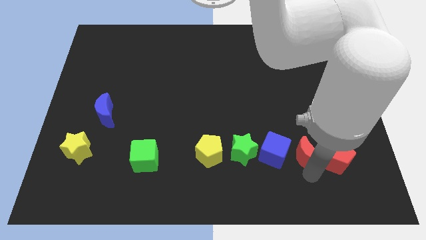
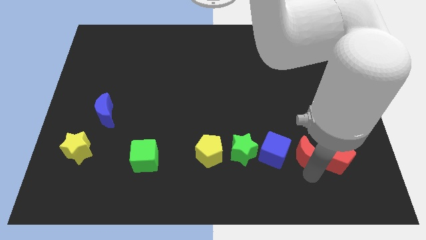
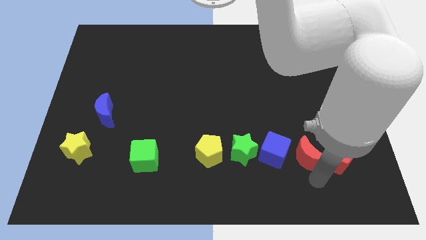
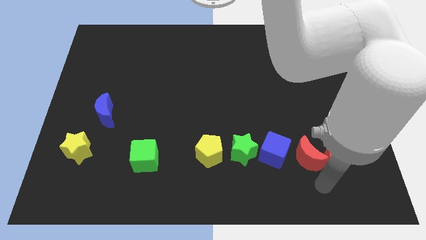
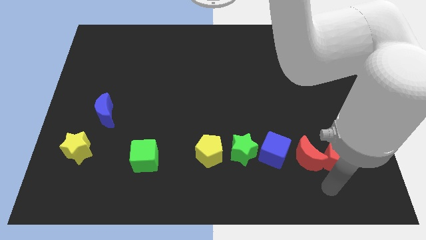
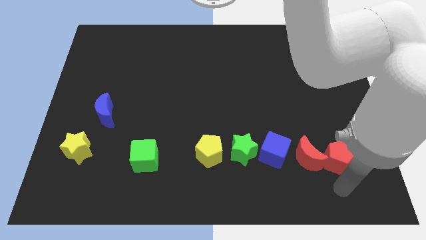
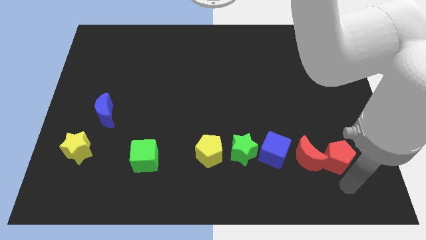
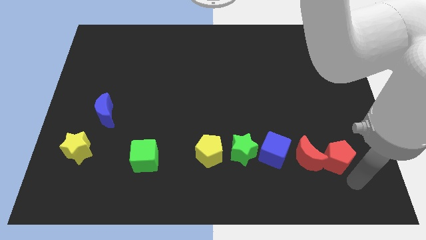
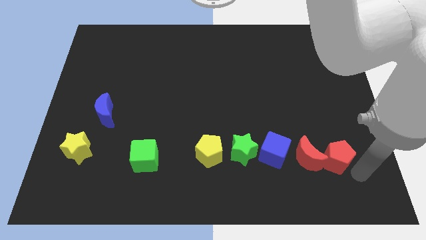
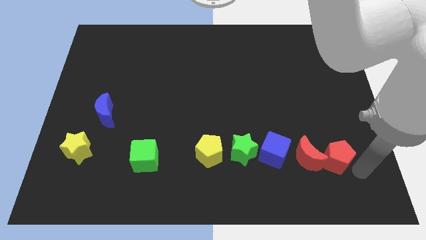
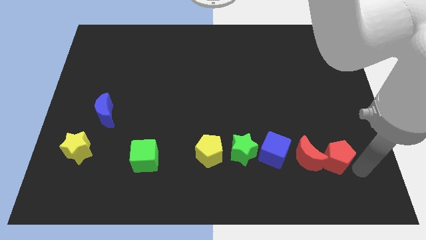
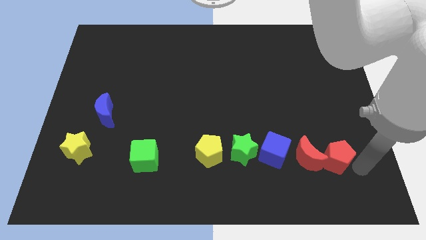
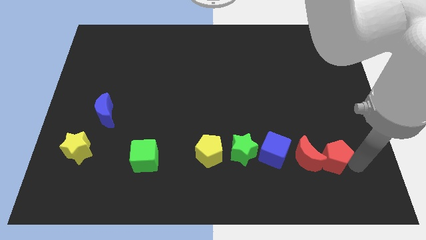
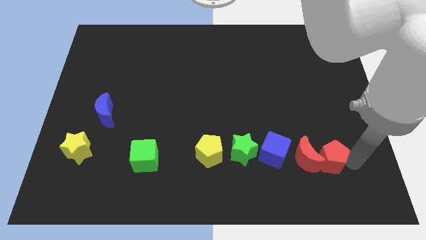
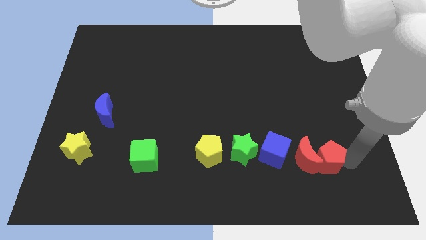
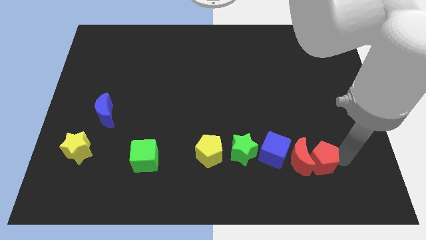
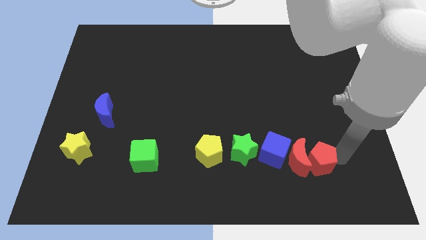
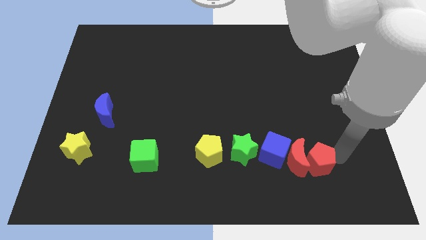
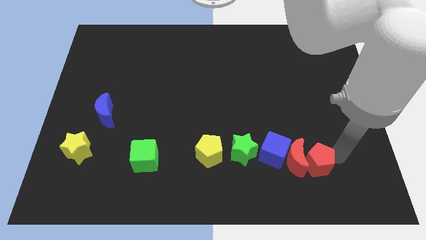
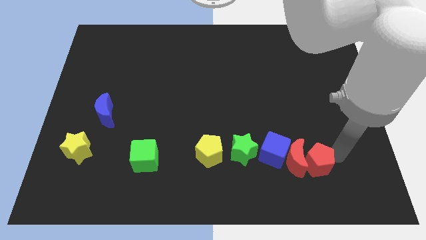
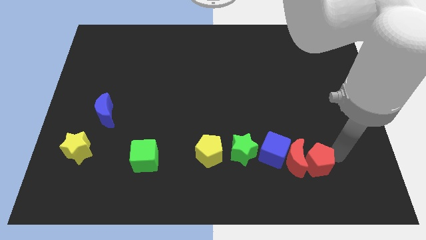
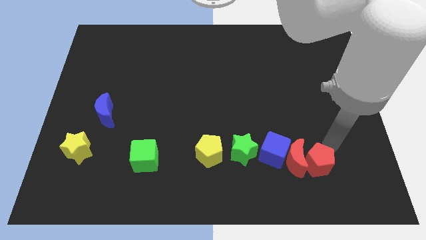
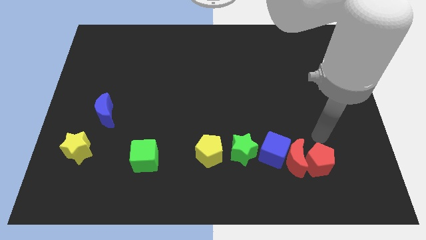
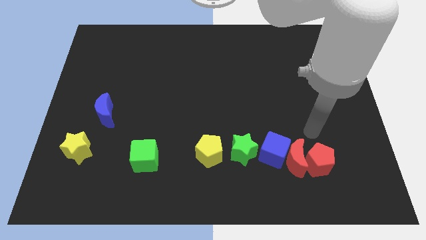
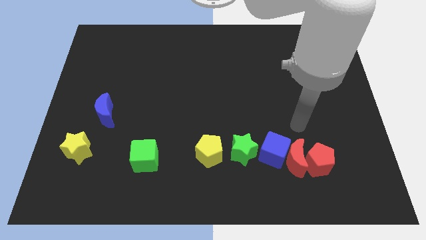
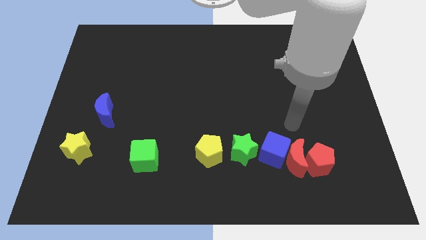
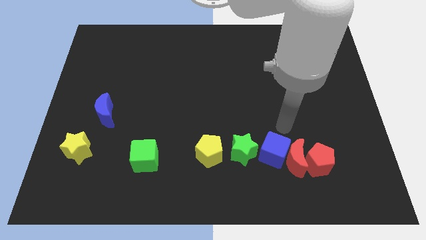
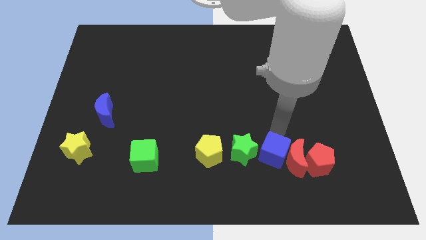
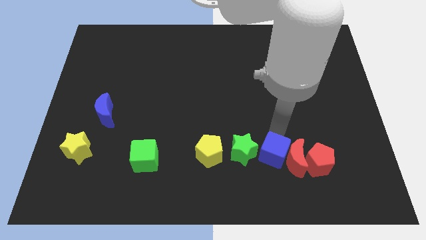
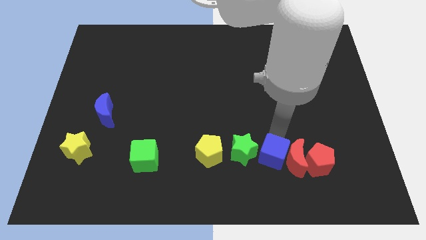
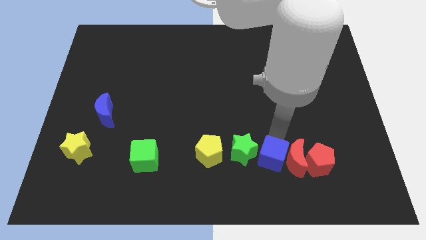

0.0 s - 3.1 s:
move your arm from bottom of red crescent to top of blue crescent

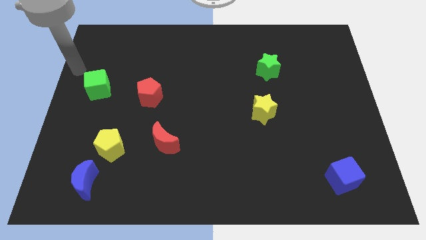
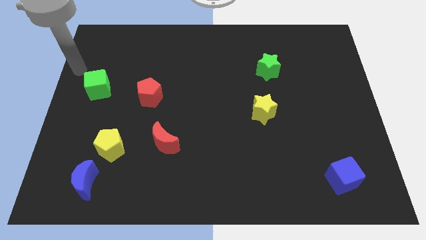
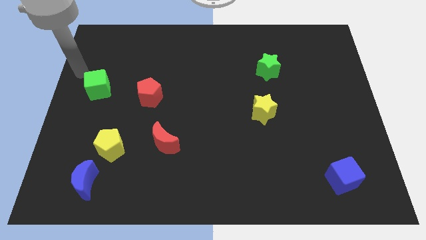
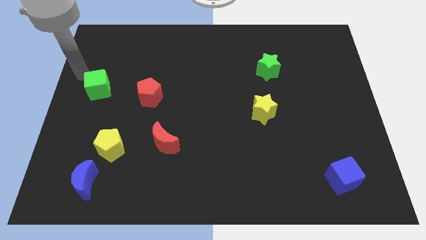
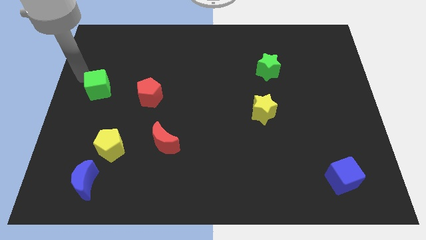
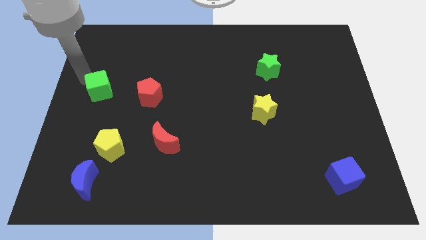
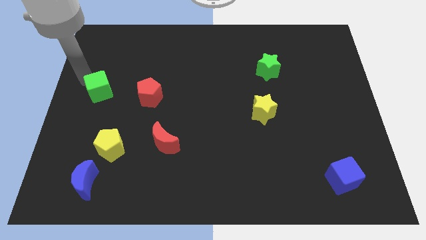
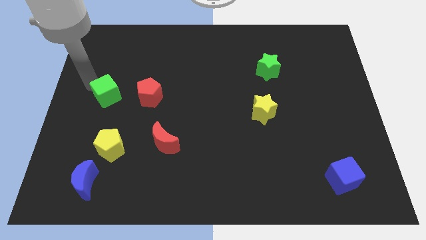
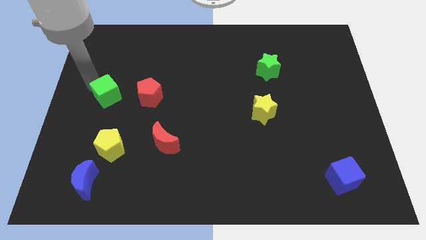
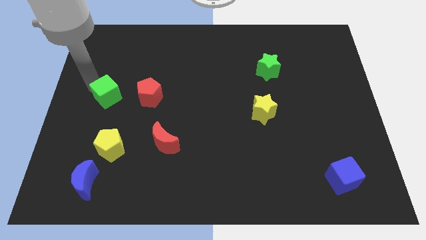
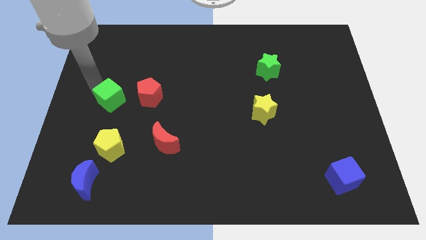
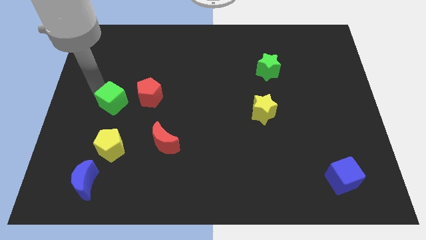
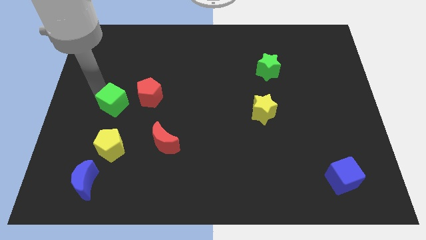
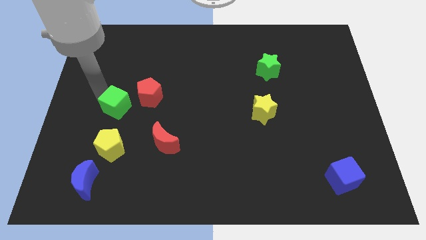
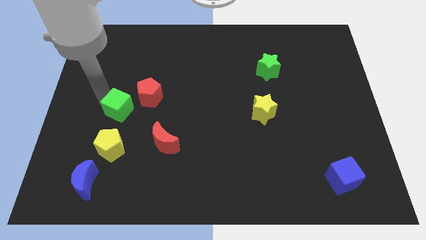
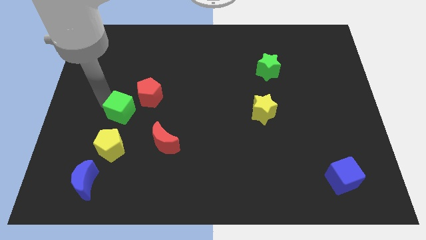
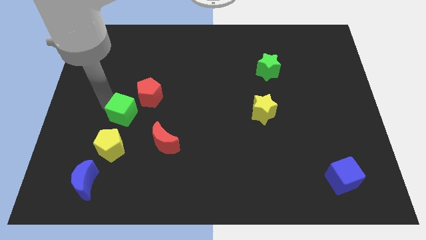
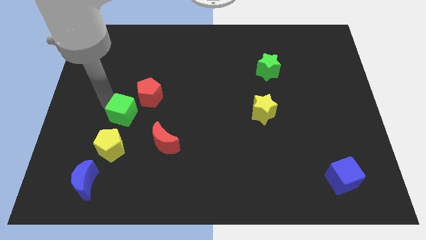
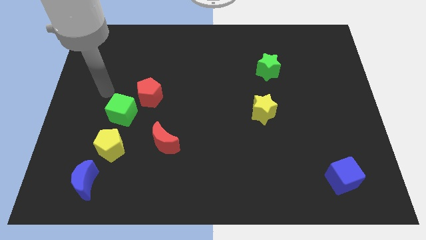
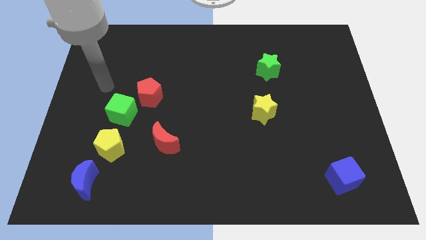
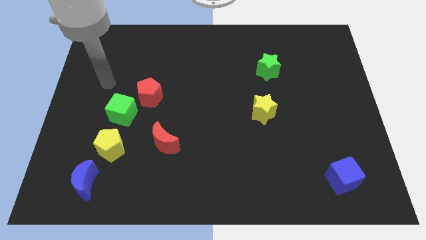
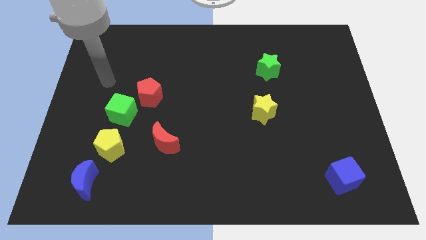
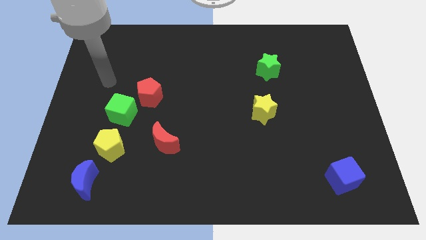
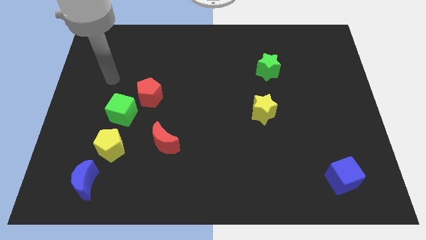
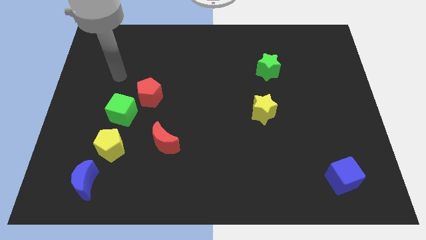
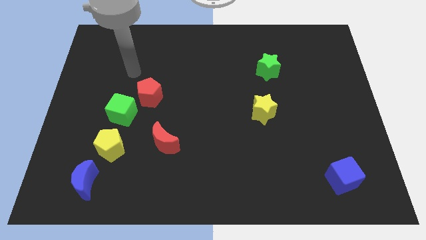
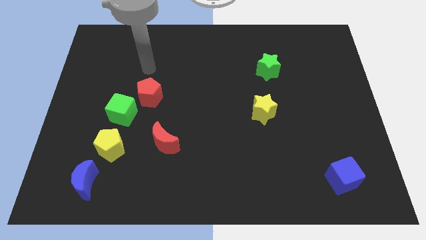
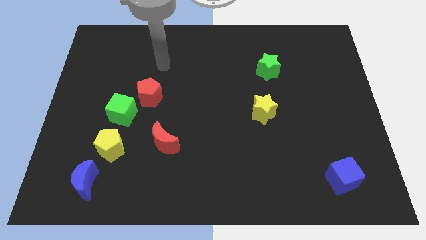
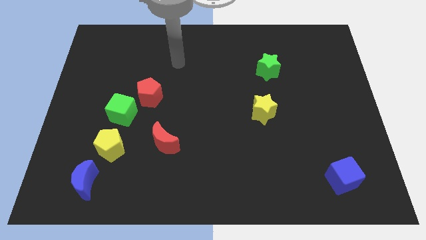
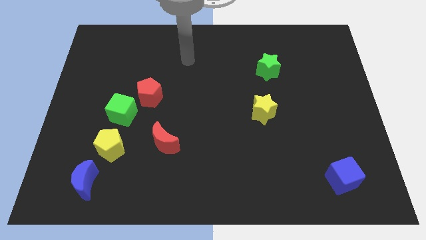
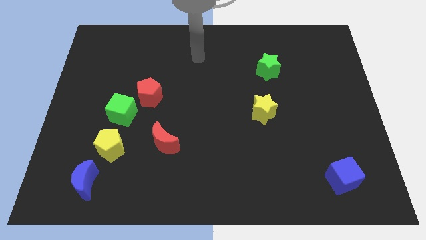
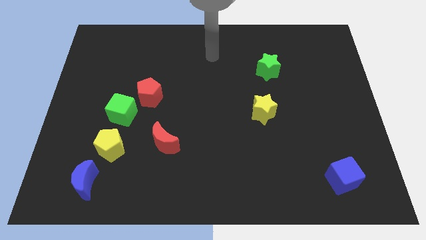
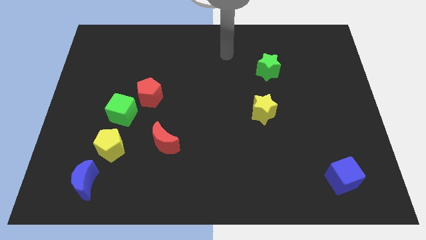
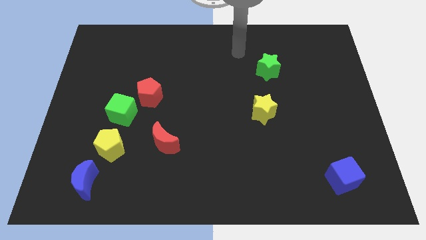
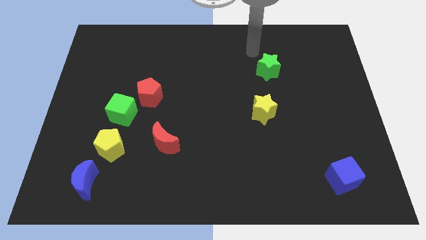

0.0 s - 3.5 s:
move green cube in between yellow pentagon and the red pentagon

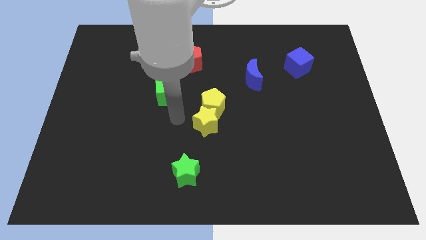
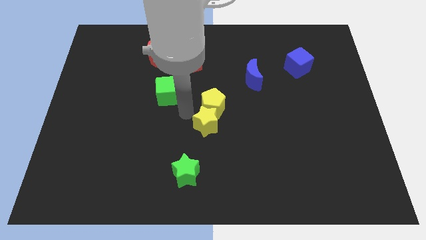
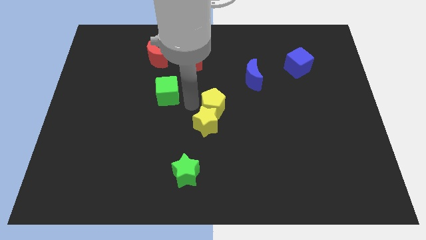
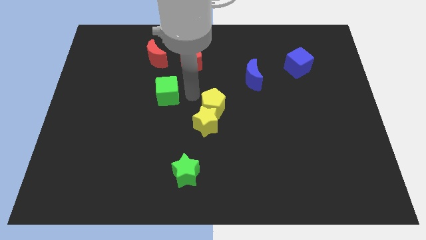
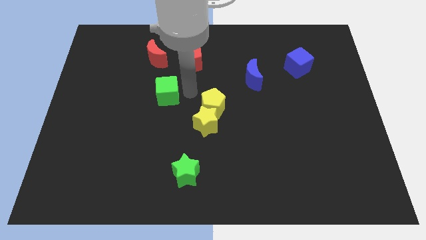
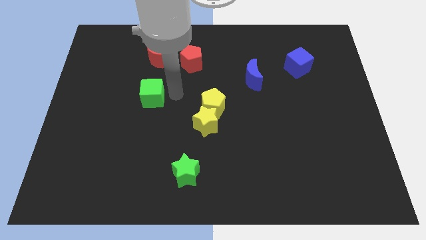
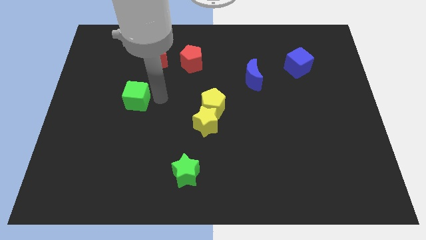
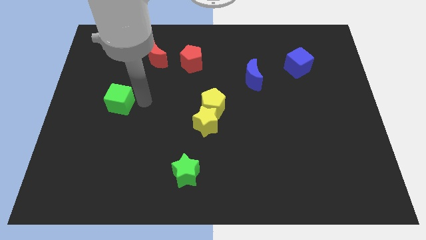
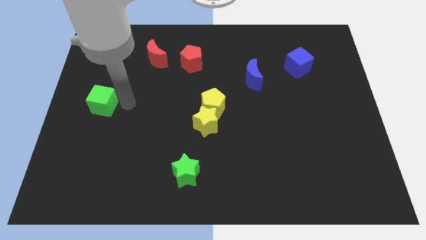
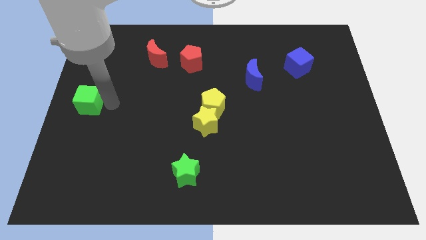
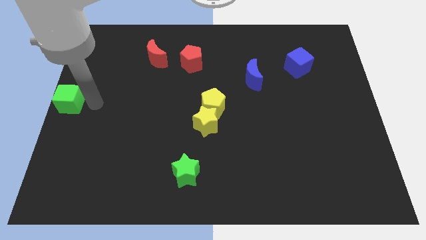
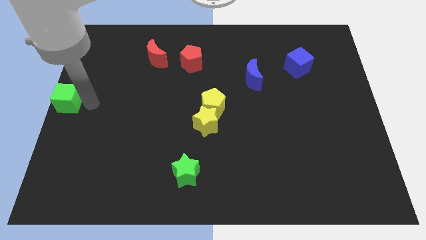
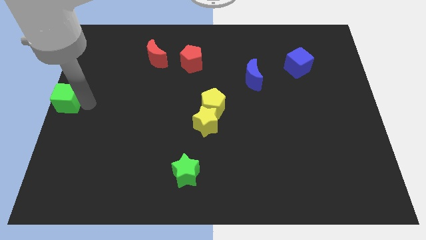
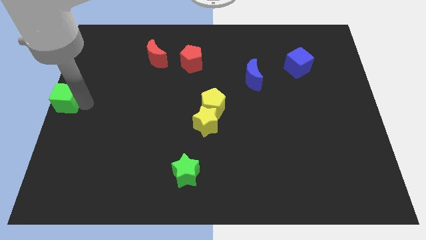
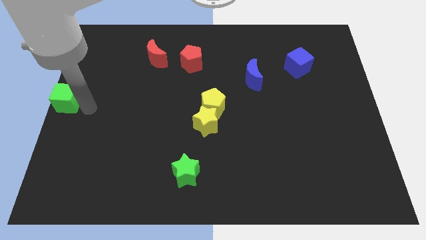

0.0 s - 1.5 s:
move green cube to the center left of board

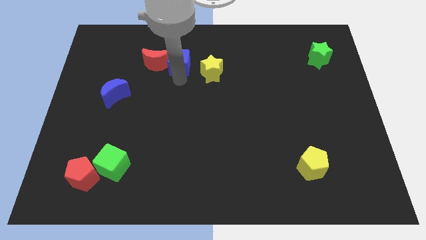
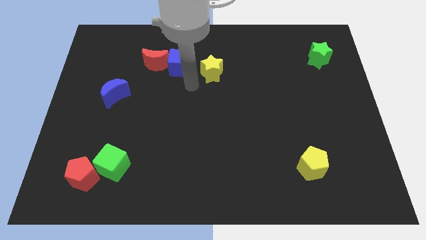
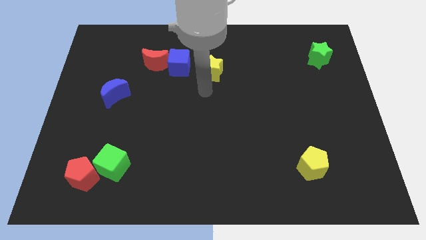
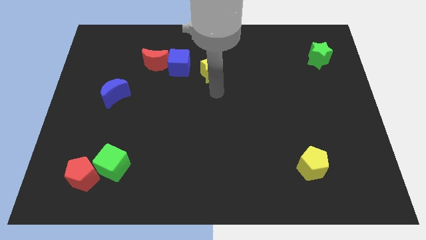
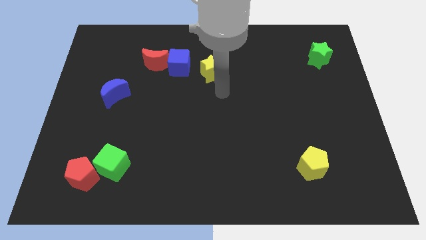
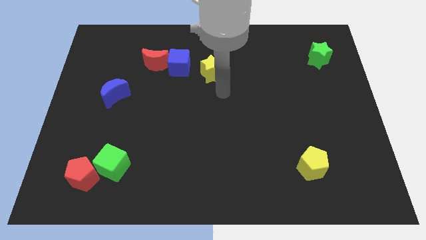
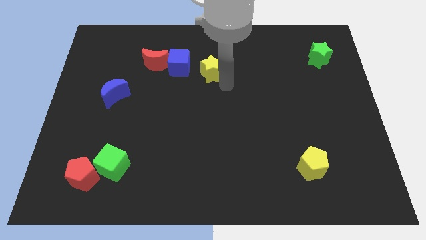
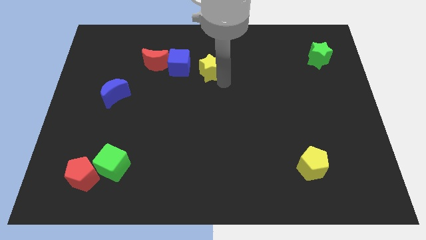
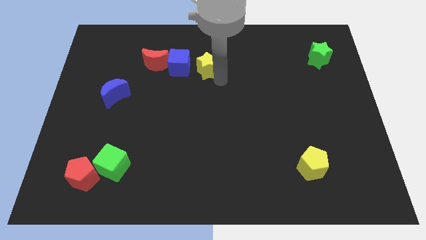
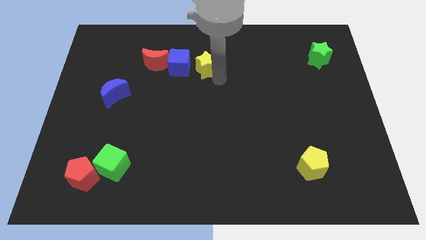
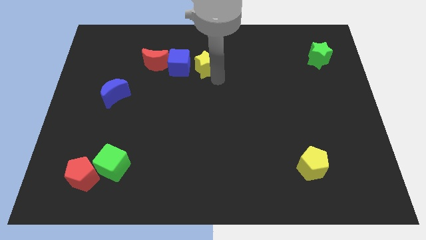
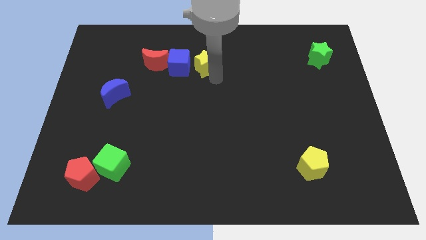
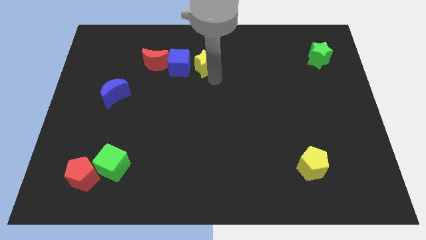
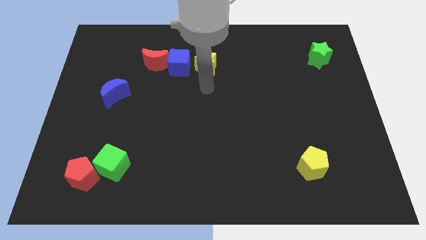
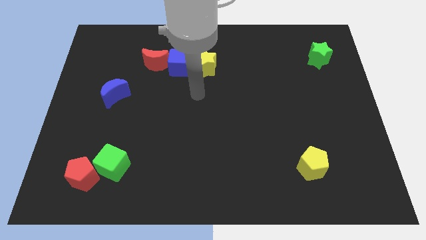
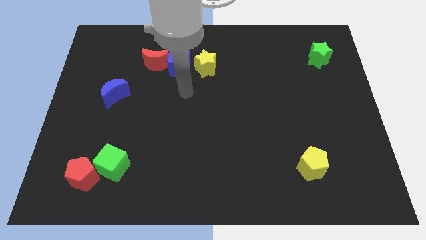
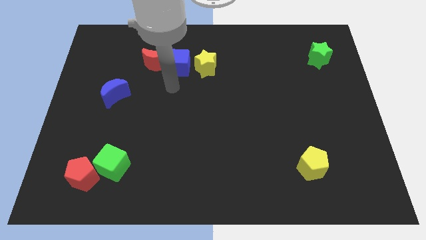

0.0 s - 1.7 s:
push the yellow star towards the right to the blue cube
